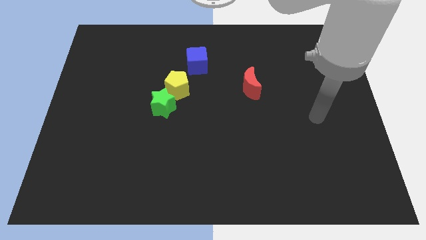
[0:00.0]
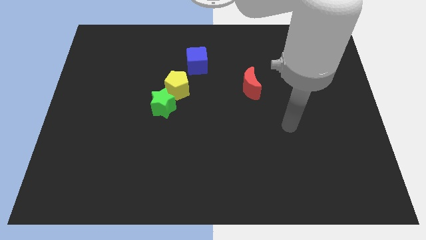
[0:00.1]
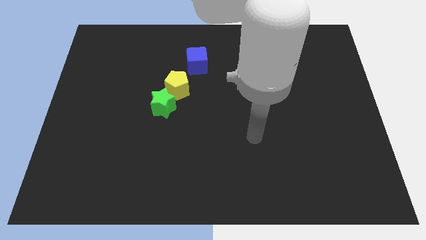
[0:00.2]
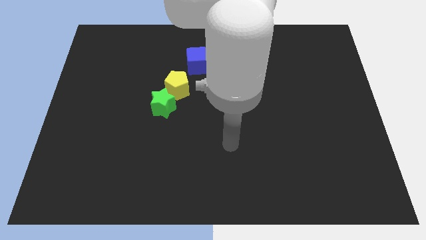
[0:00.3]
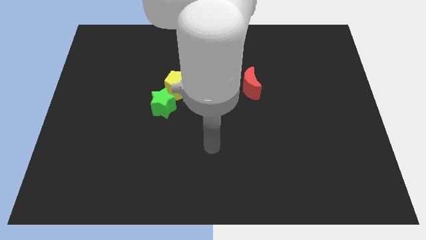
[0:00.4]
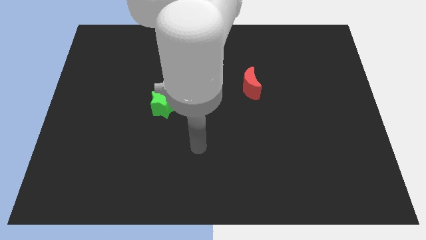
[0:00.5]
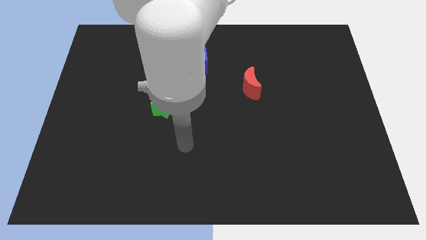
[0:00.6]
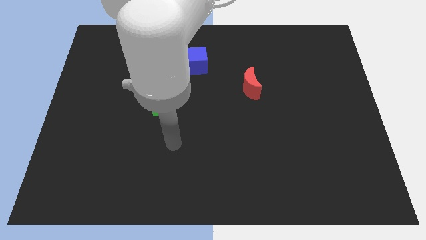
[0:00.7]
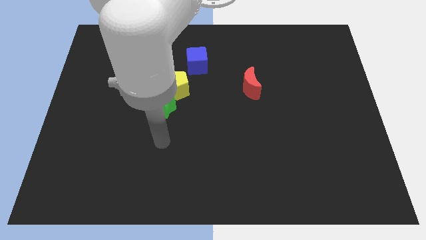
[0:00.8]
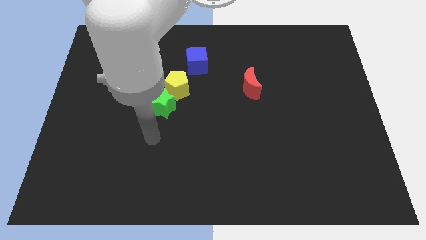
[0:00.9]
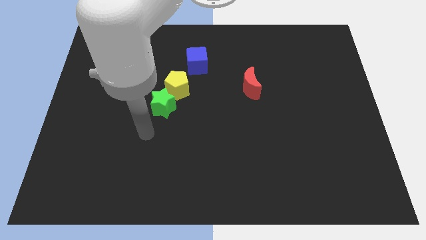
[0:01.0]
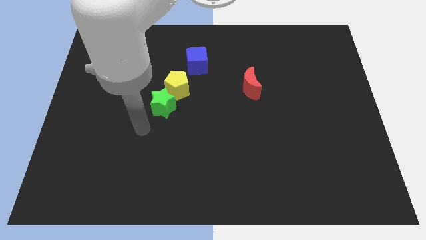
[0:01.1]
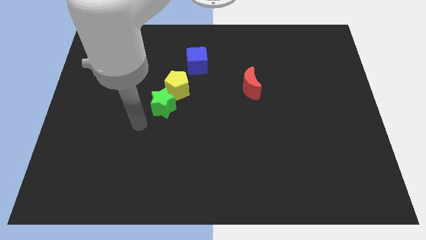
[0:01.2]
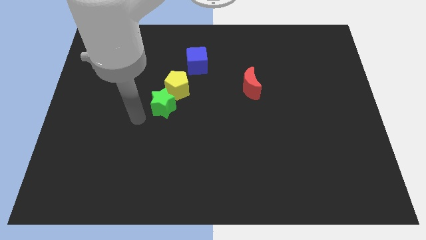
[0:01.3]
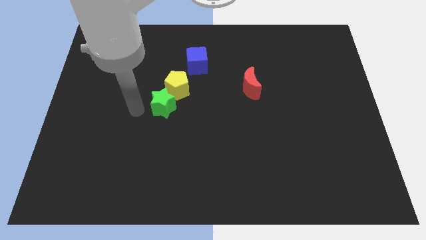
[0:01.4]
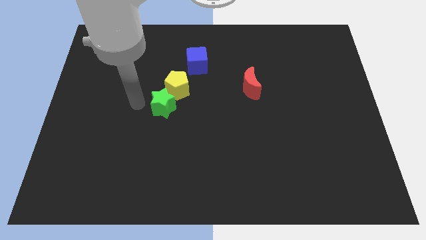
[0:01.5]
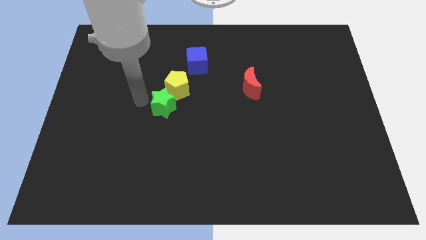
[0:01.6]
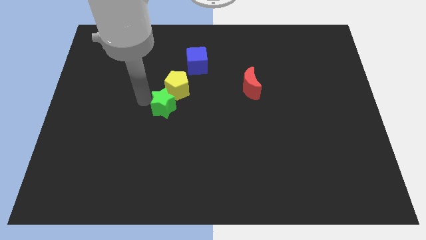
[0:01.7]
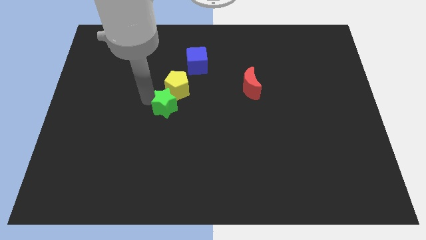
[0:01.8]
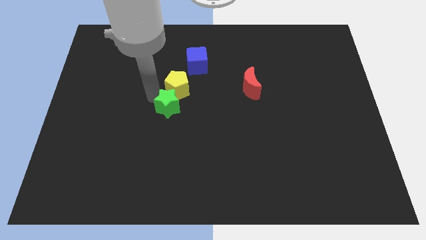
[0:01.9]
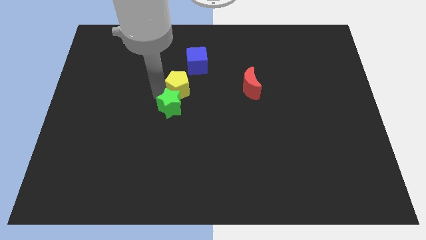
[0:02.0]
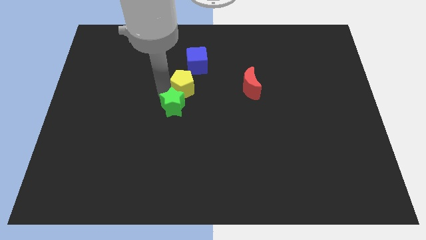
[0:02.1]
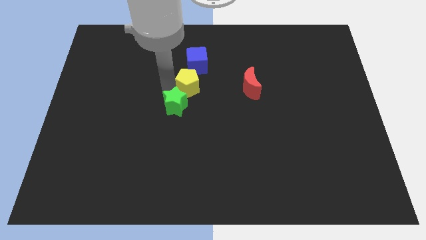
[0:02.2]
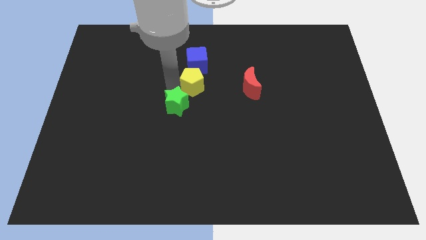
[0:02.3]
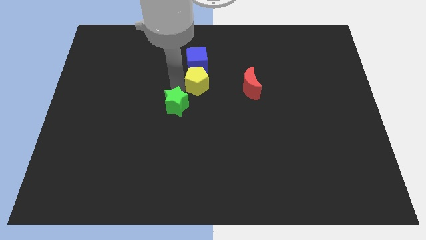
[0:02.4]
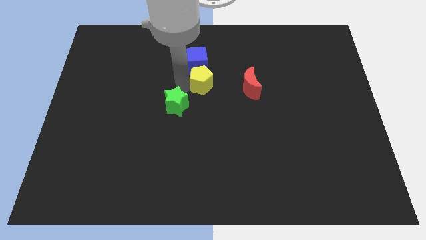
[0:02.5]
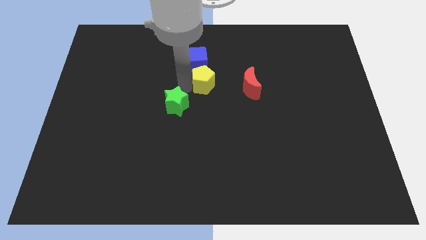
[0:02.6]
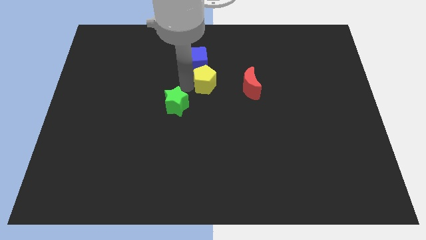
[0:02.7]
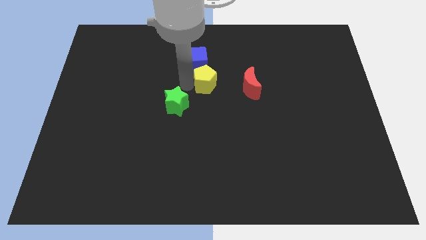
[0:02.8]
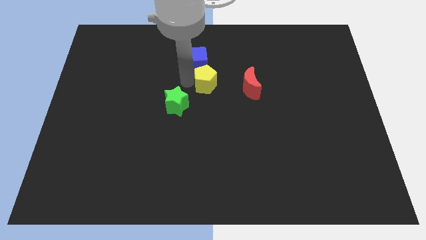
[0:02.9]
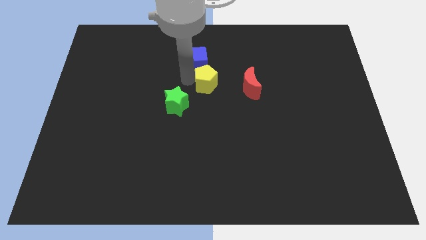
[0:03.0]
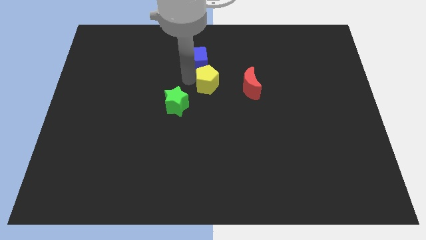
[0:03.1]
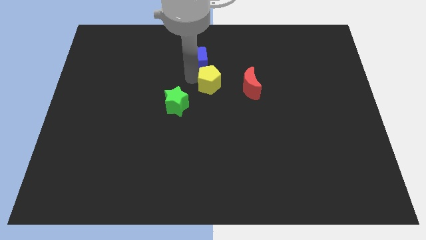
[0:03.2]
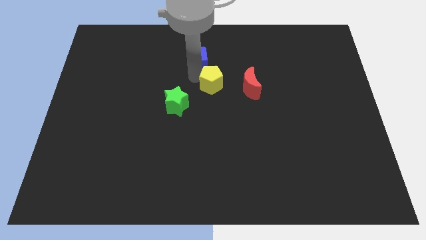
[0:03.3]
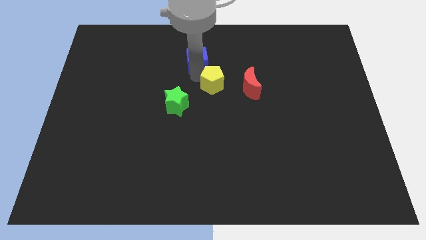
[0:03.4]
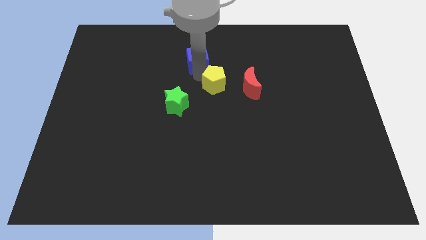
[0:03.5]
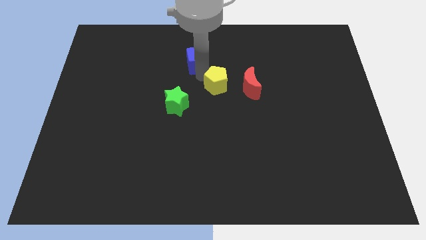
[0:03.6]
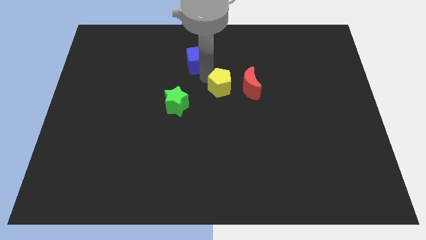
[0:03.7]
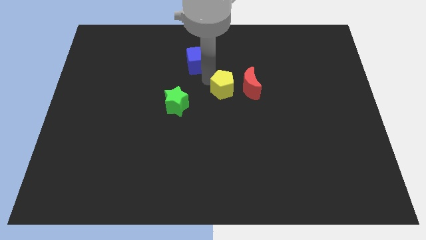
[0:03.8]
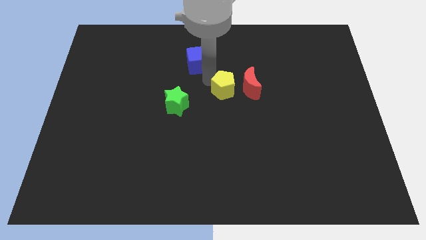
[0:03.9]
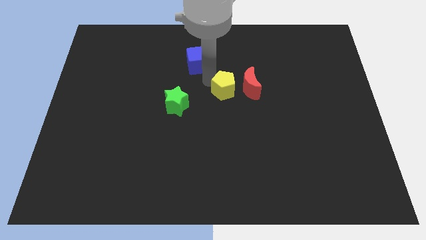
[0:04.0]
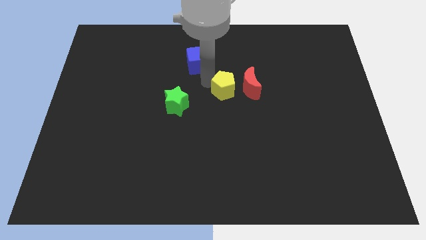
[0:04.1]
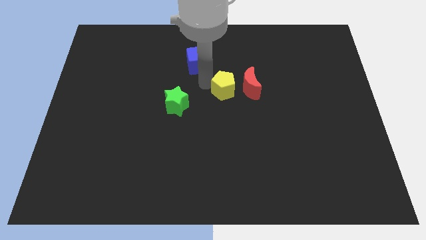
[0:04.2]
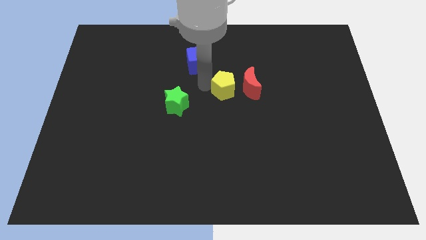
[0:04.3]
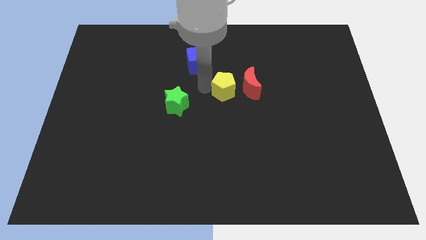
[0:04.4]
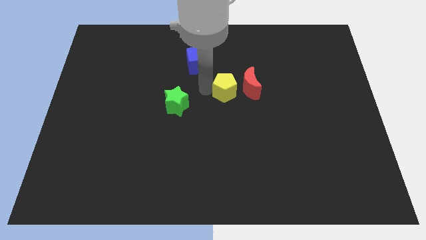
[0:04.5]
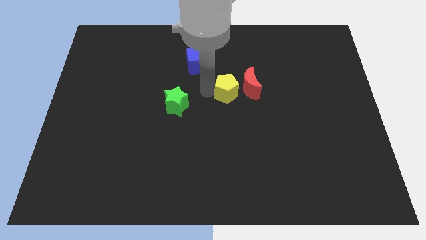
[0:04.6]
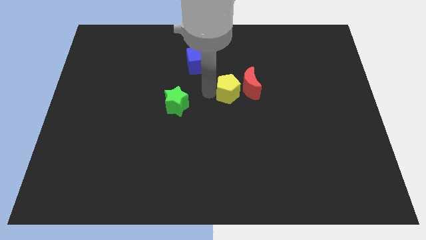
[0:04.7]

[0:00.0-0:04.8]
push the yellow pentagon close to the red block

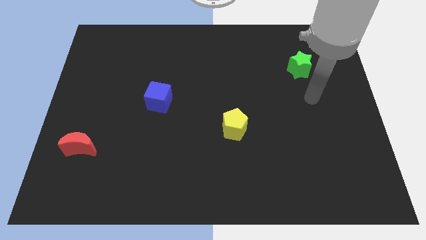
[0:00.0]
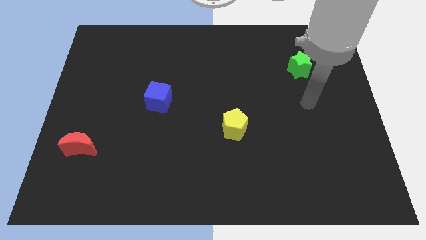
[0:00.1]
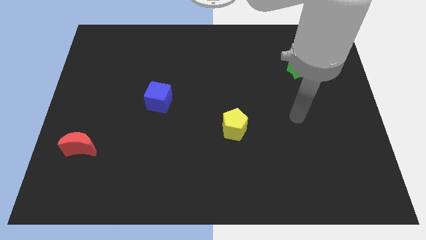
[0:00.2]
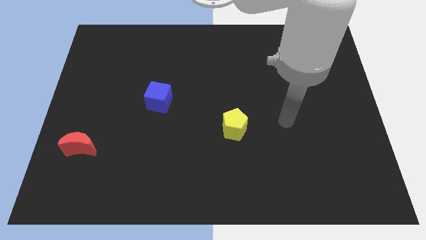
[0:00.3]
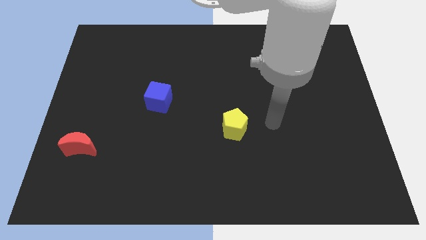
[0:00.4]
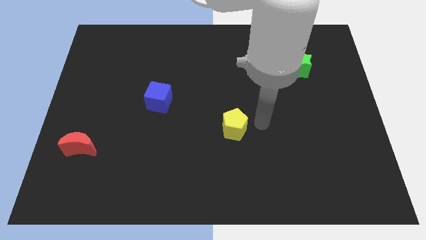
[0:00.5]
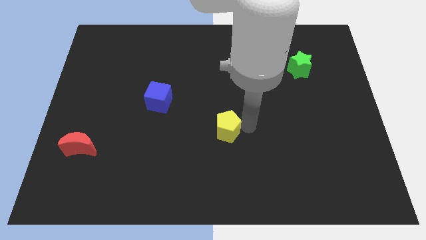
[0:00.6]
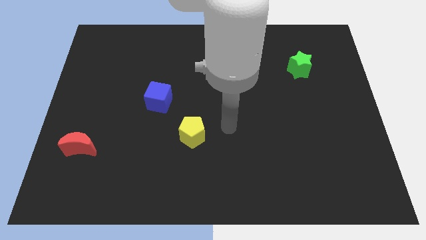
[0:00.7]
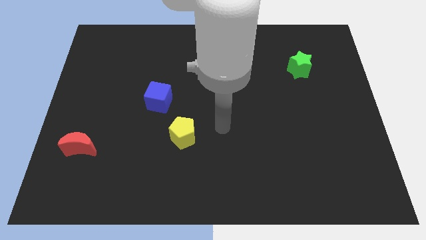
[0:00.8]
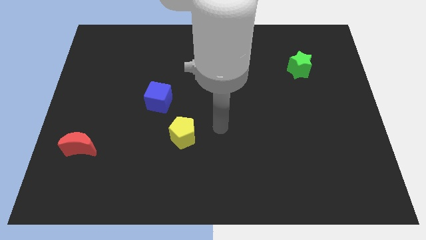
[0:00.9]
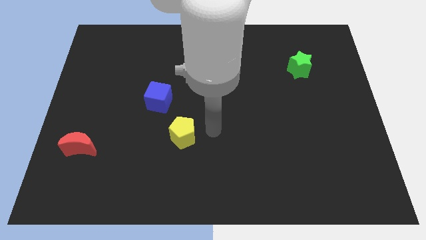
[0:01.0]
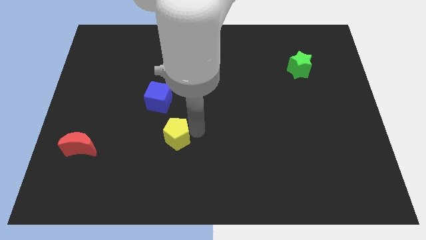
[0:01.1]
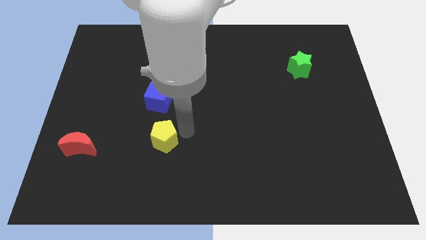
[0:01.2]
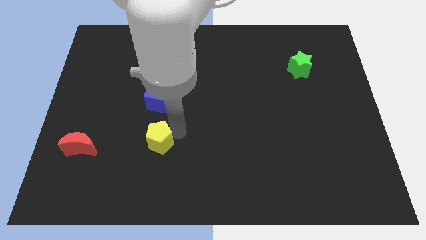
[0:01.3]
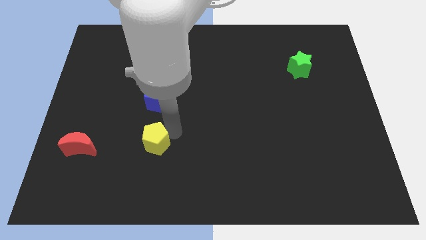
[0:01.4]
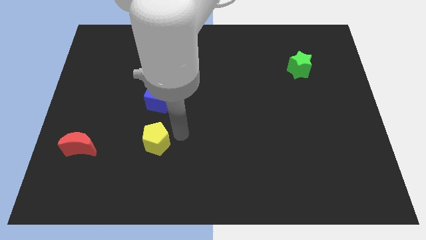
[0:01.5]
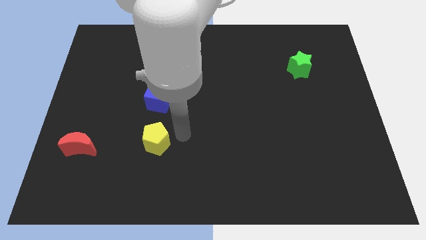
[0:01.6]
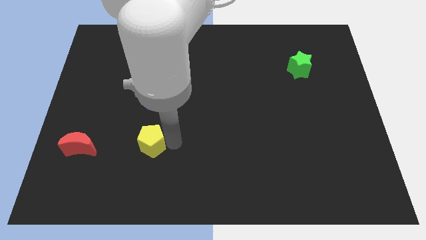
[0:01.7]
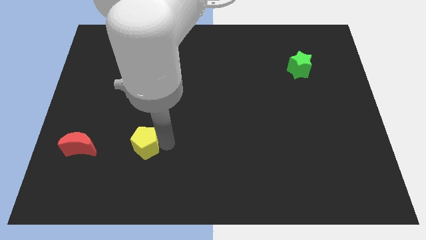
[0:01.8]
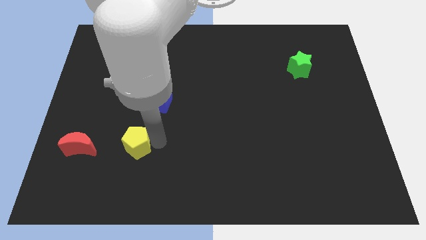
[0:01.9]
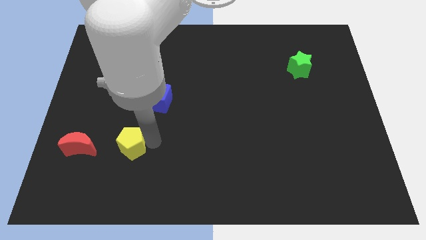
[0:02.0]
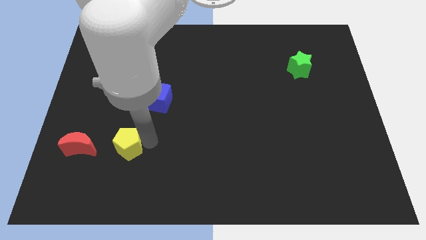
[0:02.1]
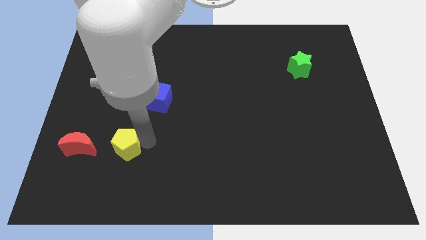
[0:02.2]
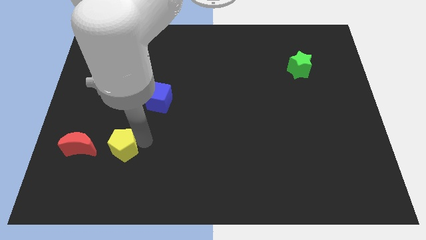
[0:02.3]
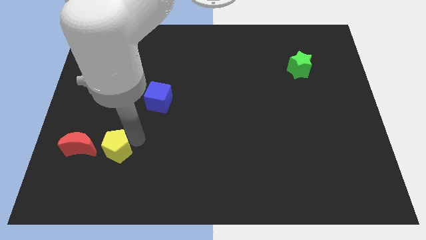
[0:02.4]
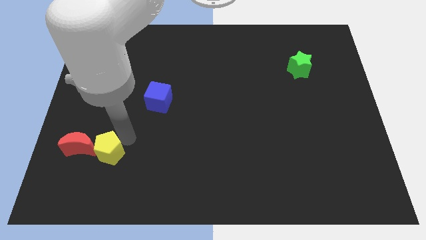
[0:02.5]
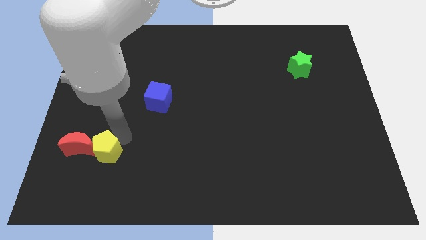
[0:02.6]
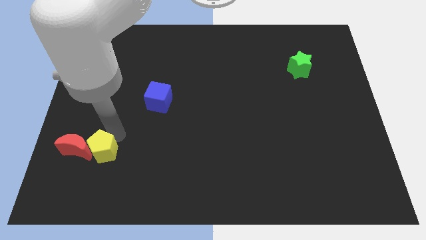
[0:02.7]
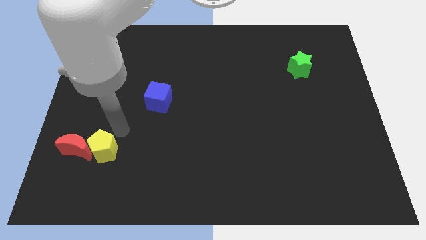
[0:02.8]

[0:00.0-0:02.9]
push the yellow pentagon next to the red moon

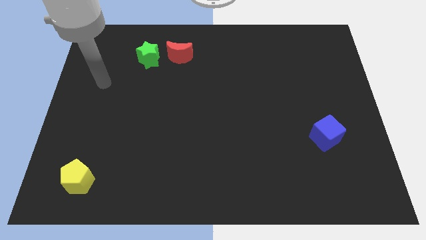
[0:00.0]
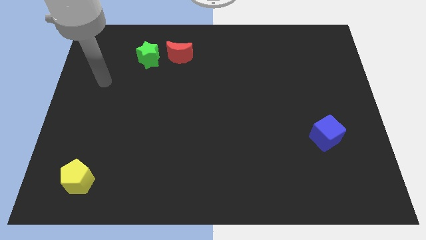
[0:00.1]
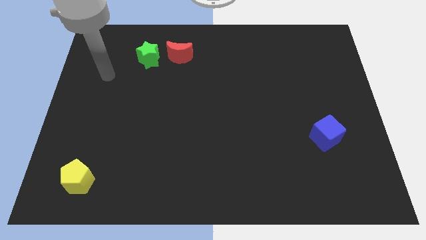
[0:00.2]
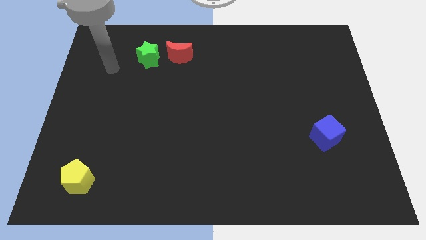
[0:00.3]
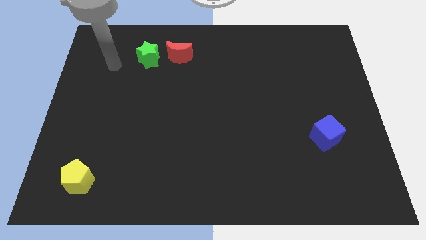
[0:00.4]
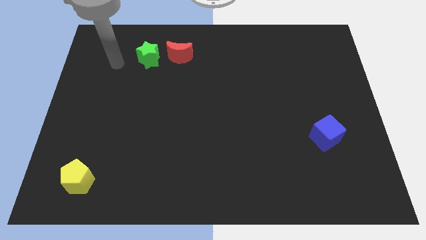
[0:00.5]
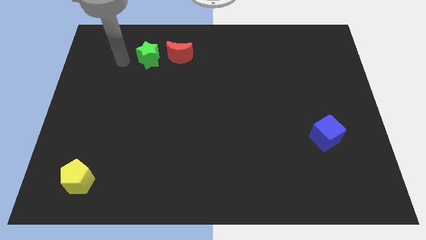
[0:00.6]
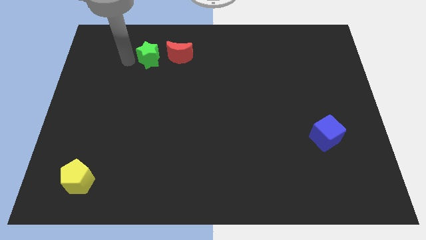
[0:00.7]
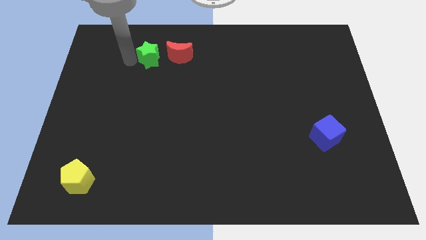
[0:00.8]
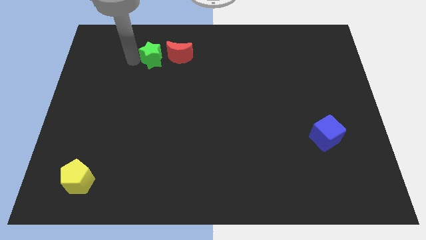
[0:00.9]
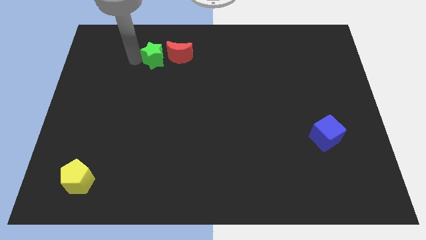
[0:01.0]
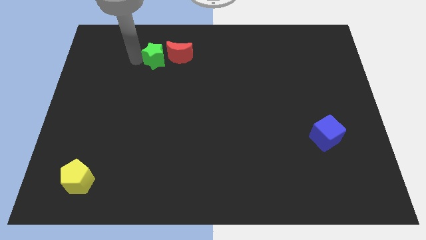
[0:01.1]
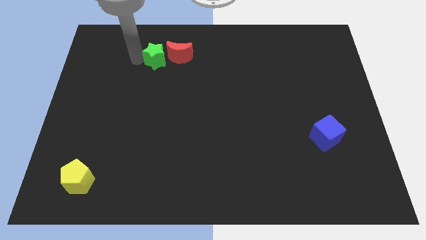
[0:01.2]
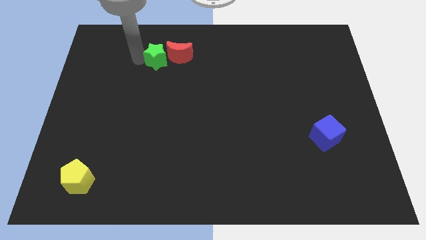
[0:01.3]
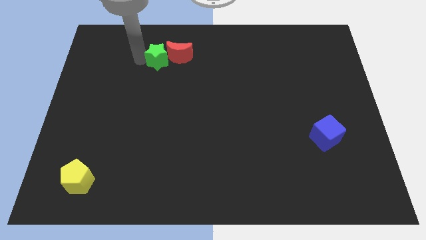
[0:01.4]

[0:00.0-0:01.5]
push the green star close to the moon
